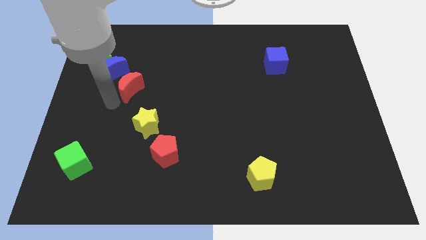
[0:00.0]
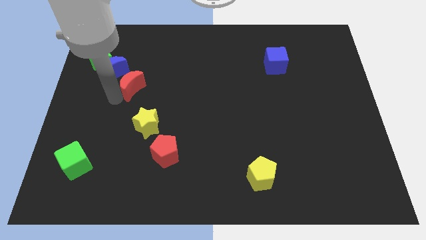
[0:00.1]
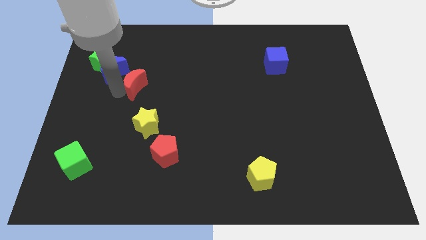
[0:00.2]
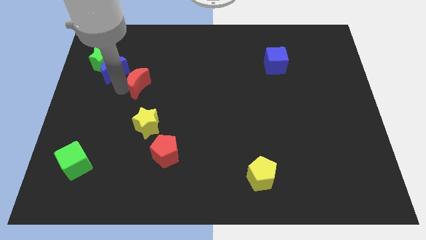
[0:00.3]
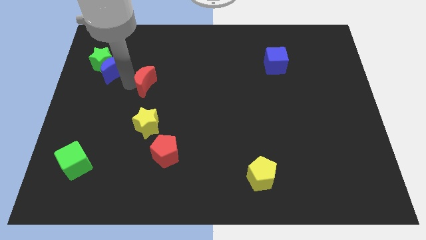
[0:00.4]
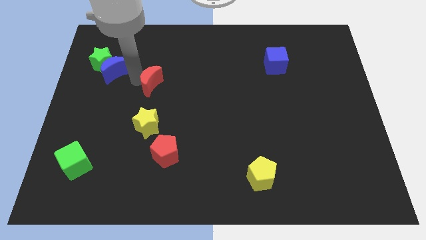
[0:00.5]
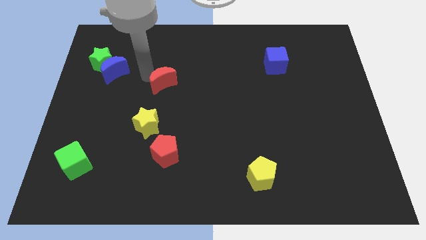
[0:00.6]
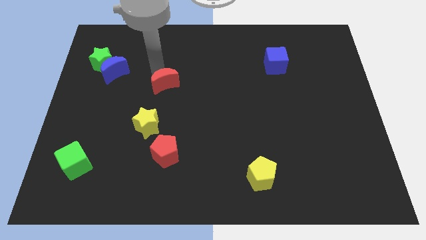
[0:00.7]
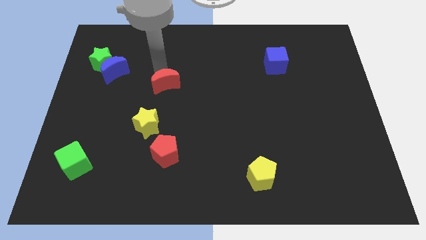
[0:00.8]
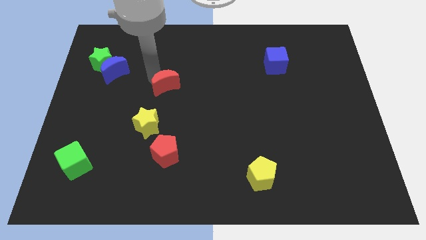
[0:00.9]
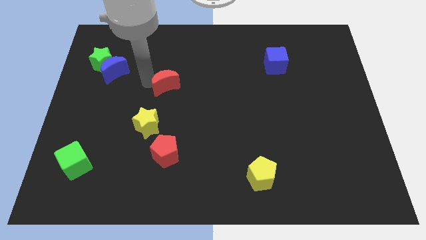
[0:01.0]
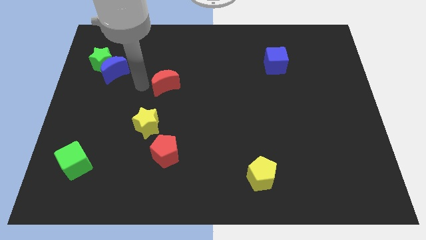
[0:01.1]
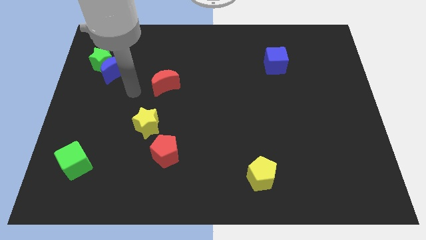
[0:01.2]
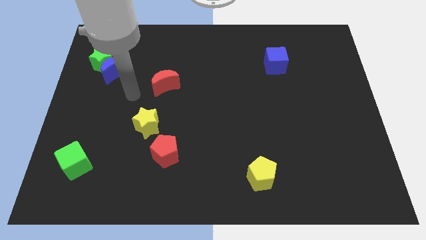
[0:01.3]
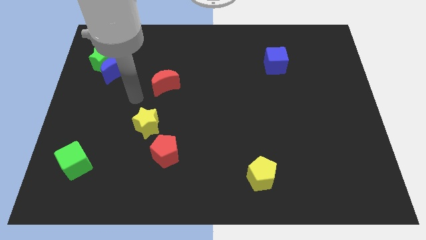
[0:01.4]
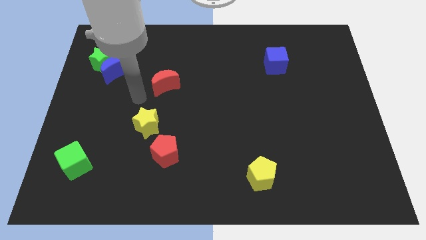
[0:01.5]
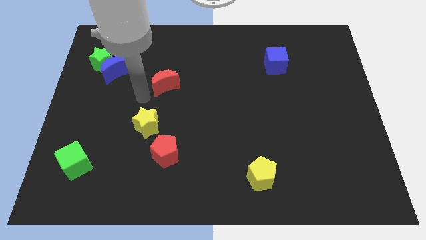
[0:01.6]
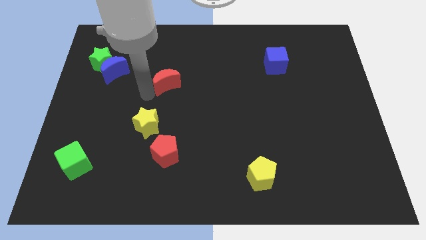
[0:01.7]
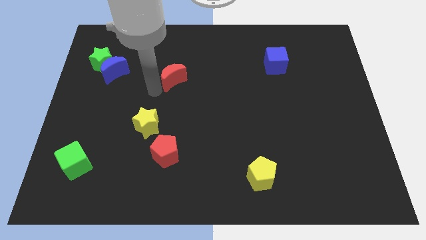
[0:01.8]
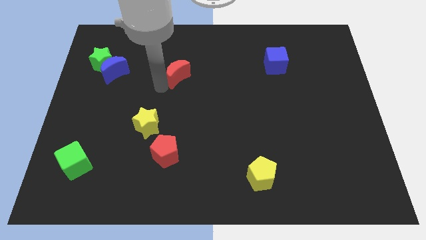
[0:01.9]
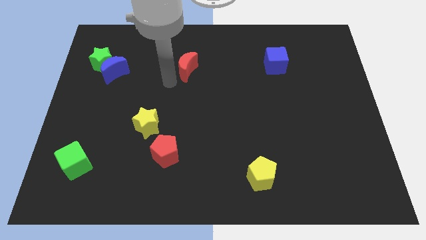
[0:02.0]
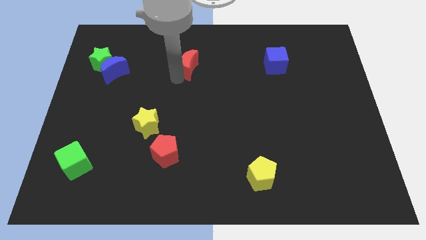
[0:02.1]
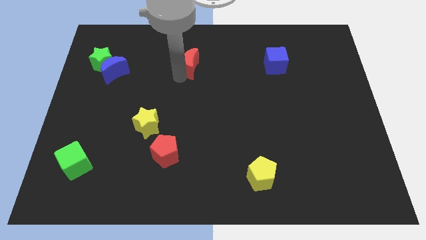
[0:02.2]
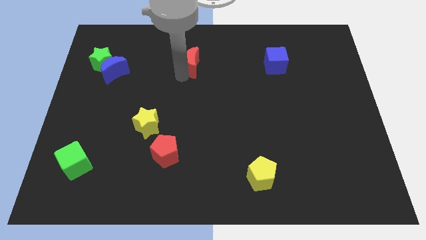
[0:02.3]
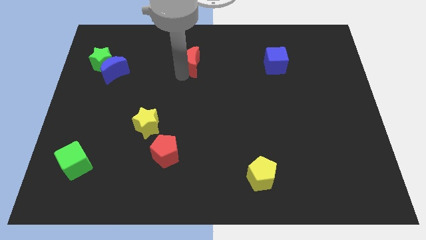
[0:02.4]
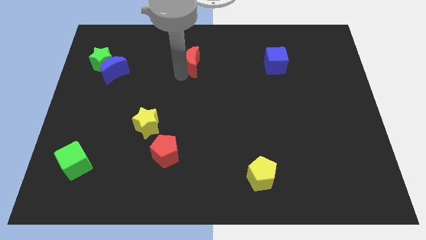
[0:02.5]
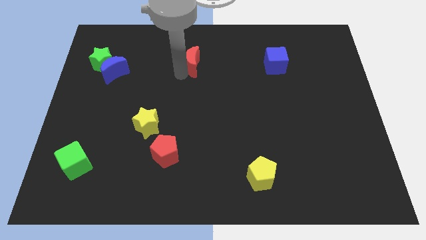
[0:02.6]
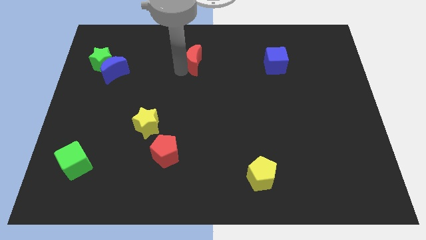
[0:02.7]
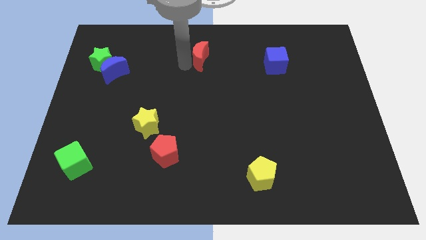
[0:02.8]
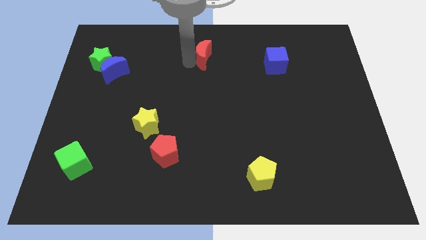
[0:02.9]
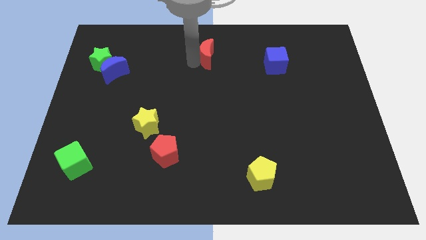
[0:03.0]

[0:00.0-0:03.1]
move the red crescent towards the top center of the board

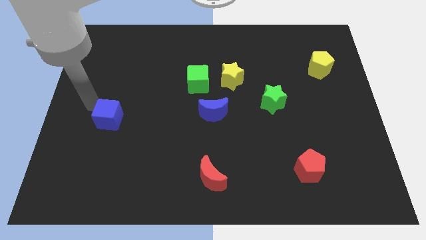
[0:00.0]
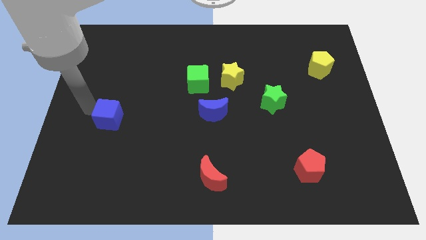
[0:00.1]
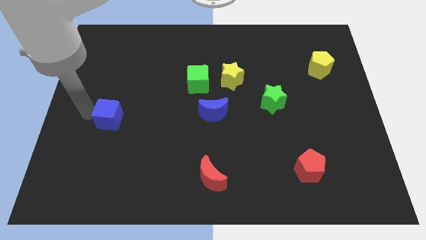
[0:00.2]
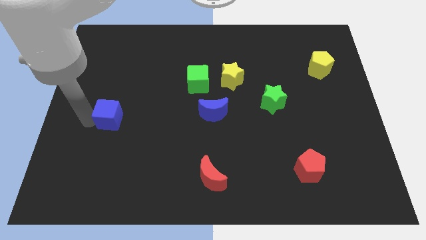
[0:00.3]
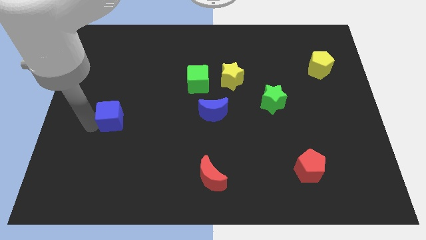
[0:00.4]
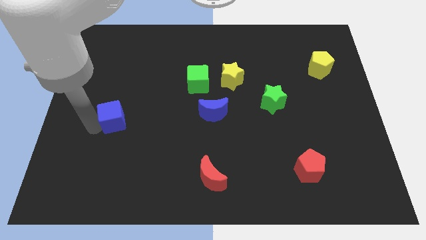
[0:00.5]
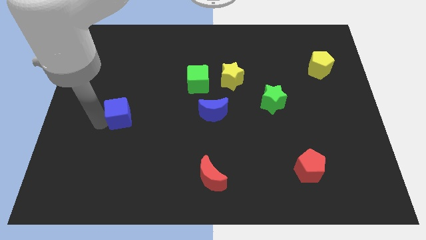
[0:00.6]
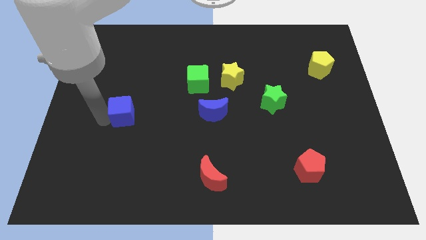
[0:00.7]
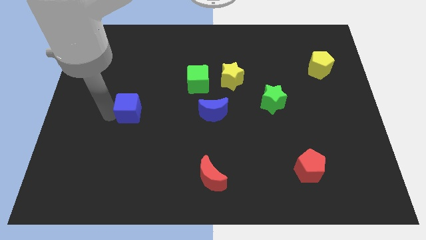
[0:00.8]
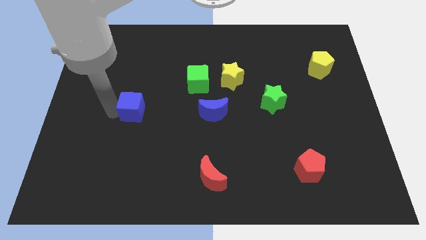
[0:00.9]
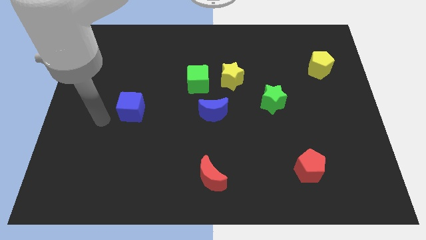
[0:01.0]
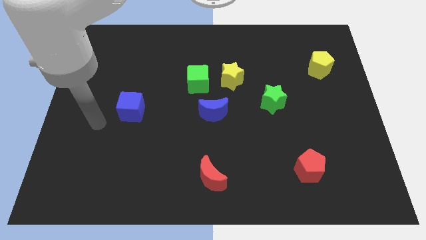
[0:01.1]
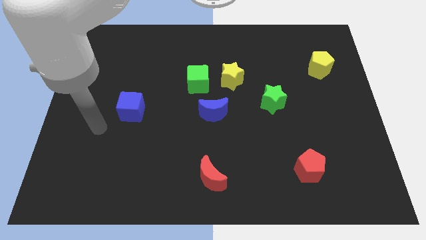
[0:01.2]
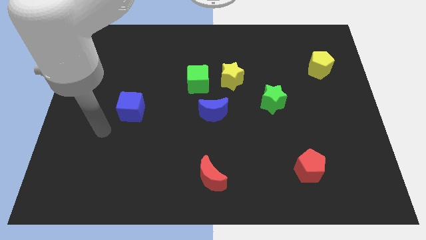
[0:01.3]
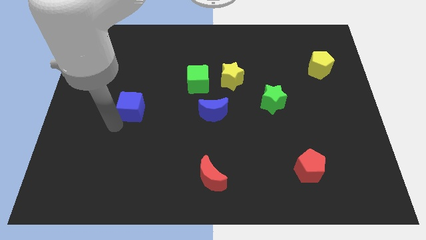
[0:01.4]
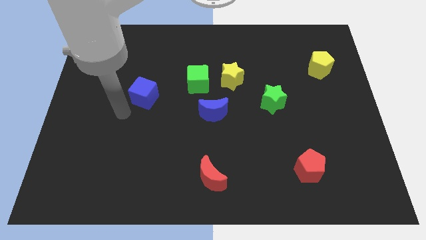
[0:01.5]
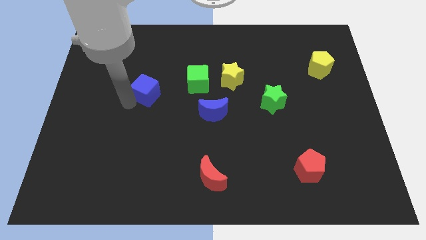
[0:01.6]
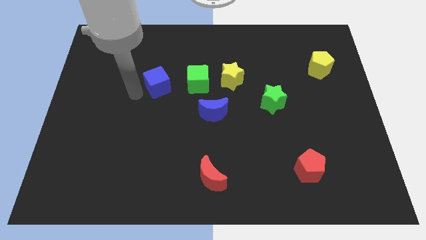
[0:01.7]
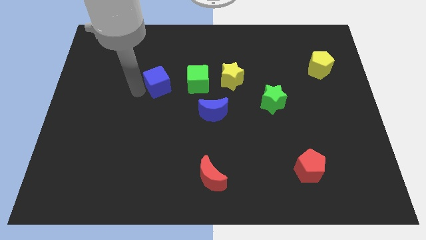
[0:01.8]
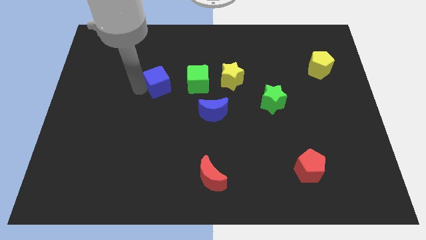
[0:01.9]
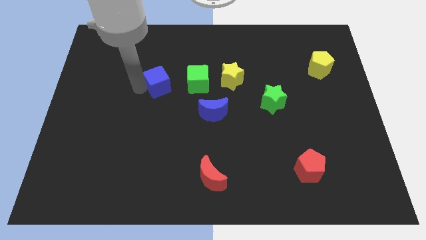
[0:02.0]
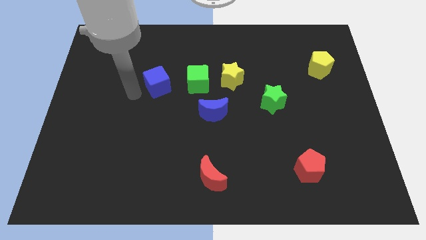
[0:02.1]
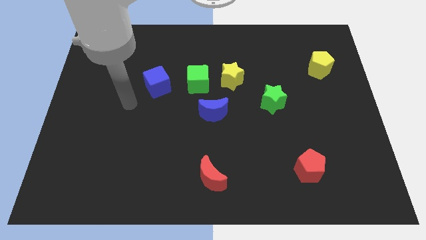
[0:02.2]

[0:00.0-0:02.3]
push the blue cube to the right of the green cube

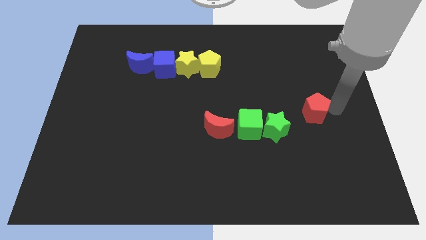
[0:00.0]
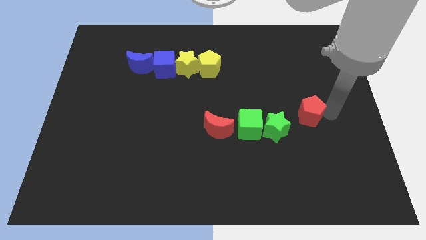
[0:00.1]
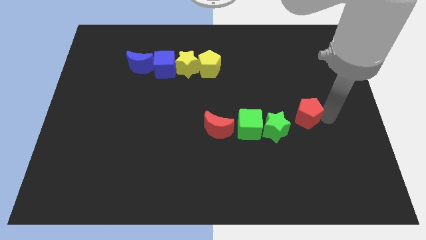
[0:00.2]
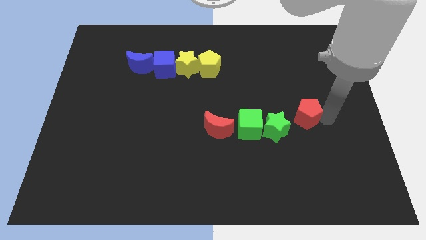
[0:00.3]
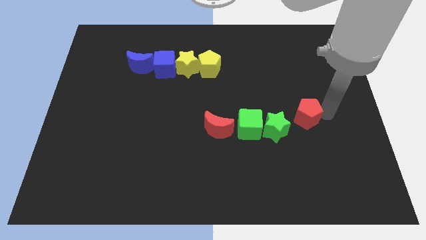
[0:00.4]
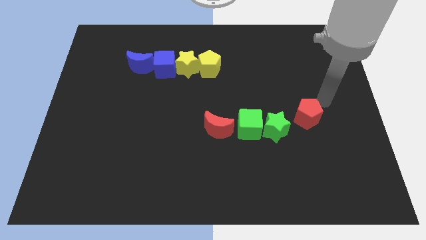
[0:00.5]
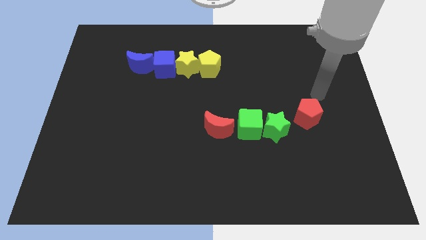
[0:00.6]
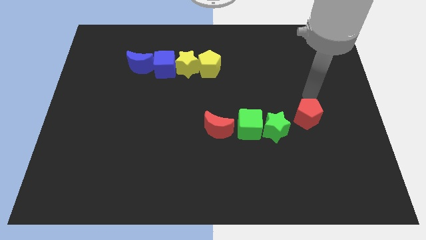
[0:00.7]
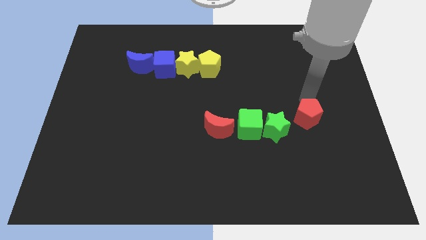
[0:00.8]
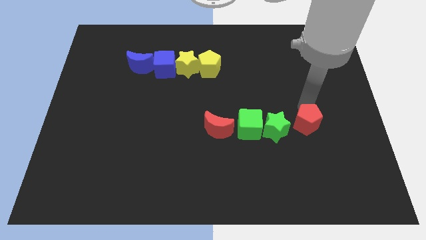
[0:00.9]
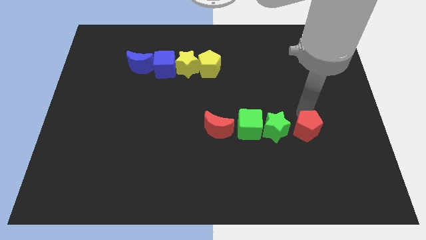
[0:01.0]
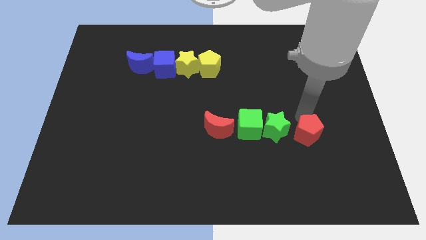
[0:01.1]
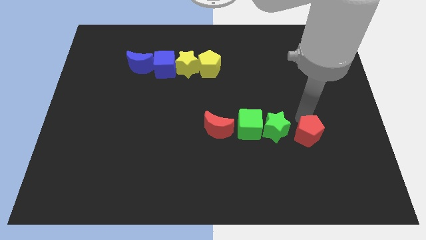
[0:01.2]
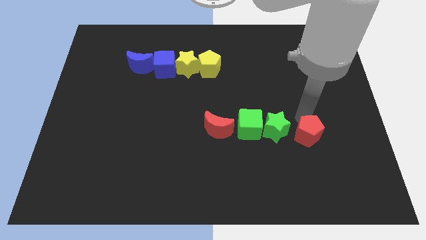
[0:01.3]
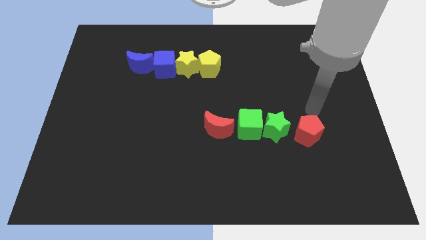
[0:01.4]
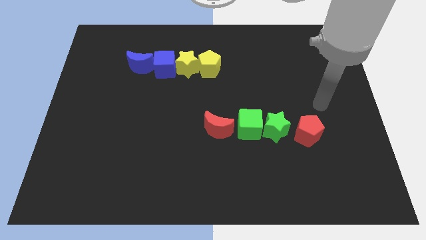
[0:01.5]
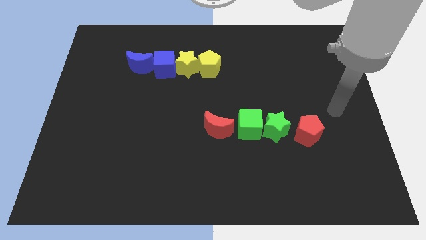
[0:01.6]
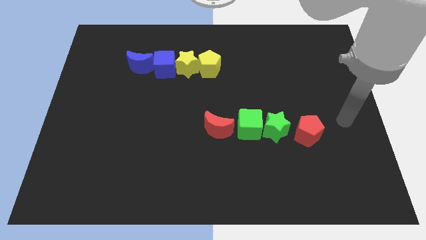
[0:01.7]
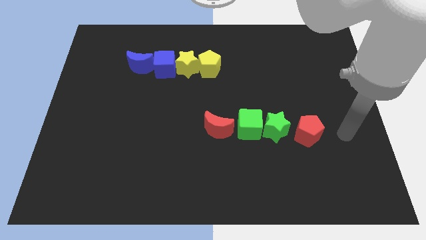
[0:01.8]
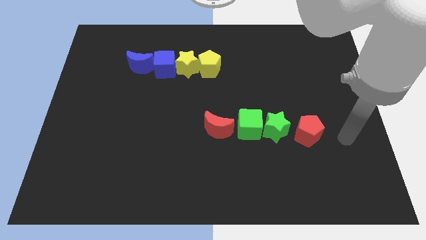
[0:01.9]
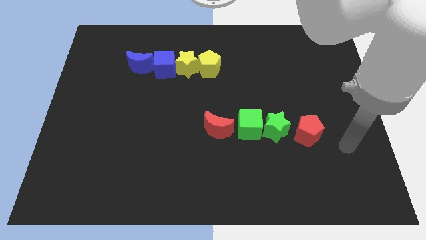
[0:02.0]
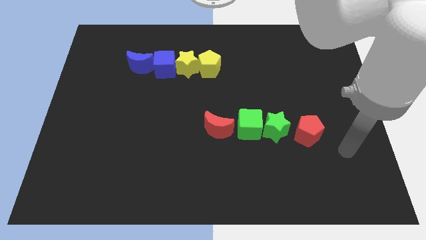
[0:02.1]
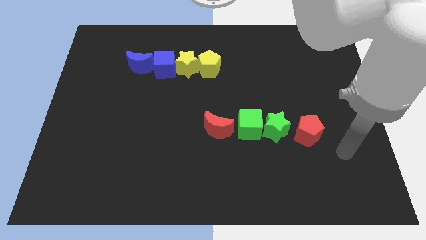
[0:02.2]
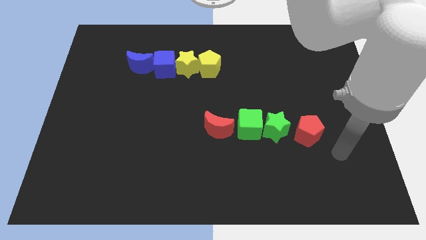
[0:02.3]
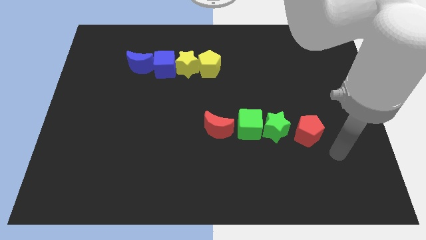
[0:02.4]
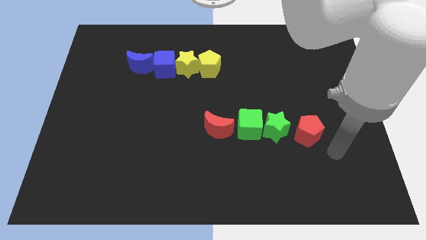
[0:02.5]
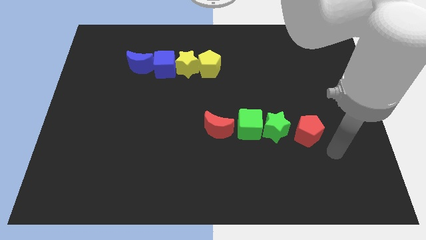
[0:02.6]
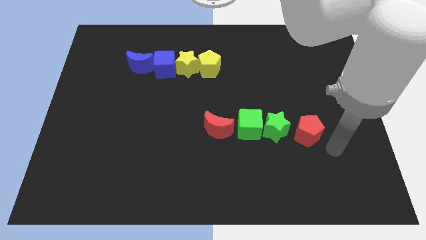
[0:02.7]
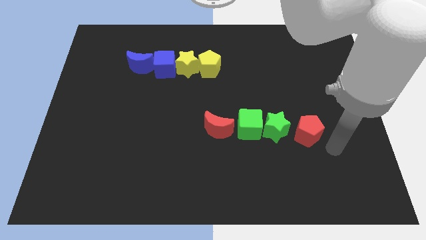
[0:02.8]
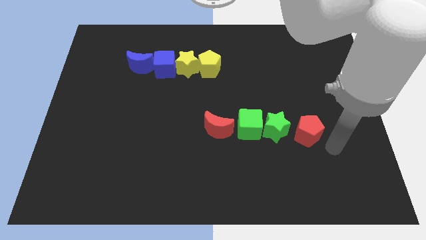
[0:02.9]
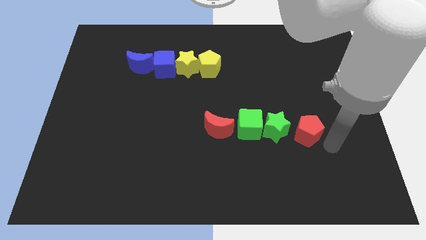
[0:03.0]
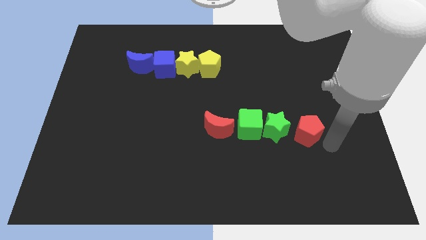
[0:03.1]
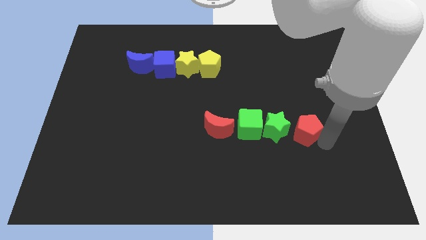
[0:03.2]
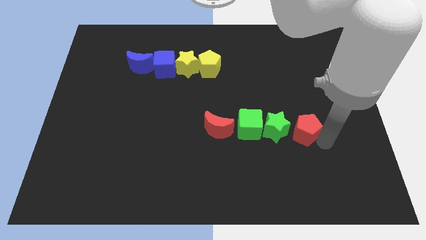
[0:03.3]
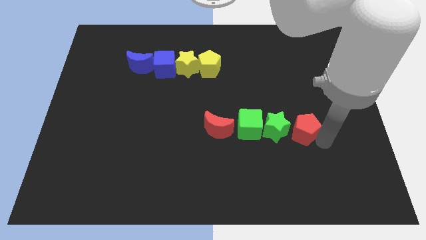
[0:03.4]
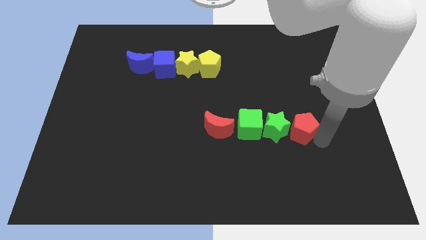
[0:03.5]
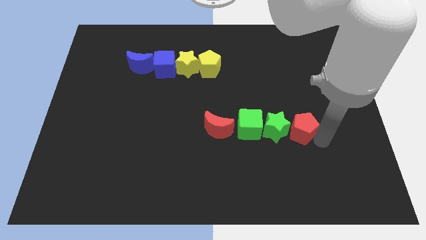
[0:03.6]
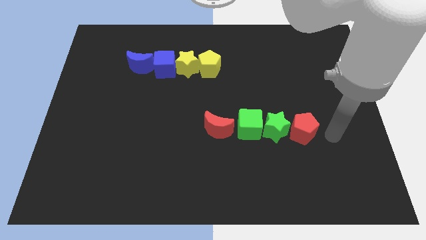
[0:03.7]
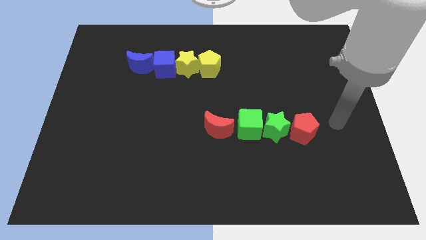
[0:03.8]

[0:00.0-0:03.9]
move the red penatgon close to green star
